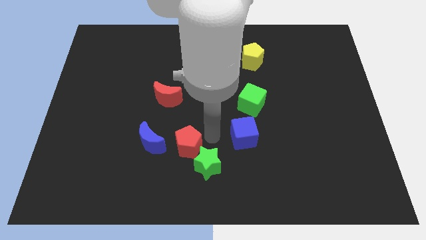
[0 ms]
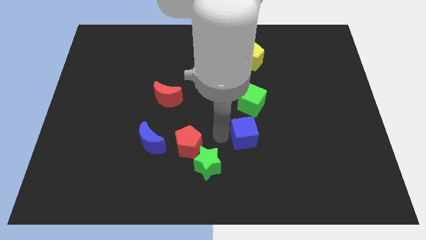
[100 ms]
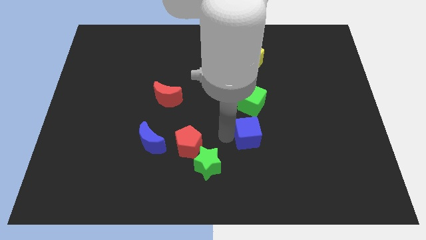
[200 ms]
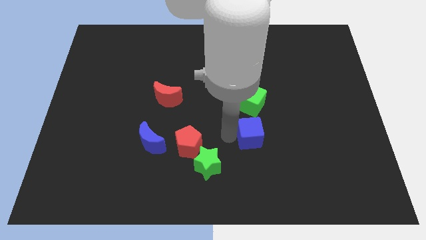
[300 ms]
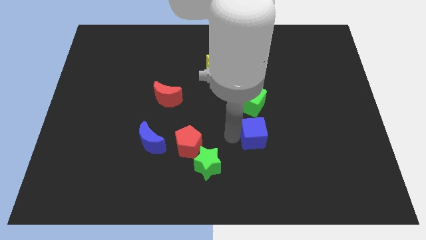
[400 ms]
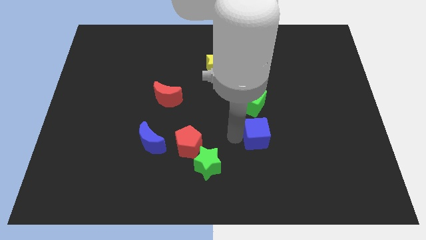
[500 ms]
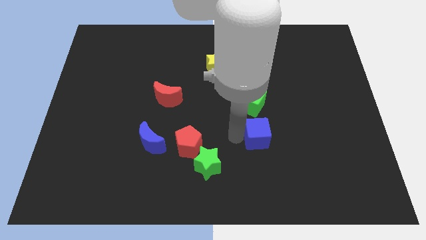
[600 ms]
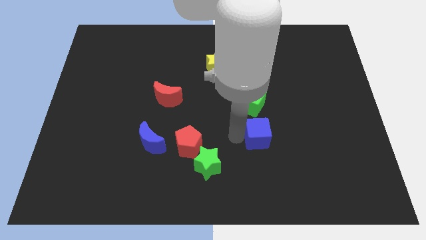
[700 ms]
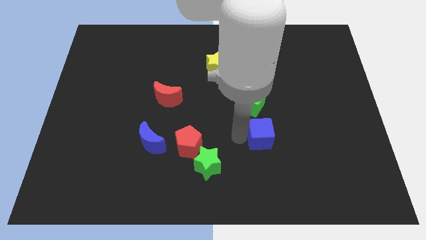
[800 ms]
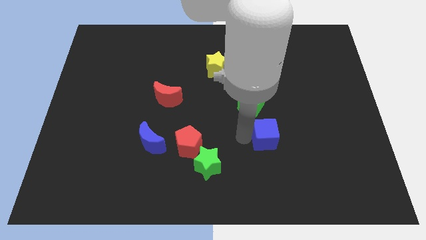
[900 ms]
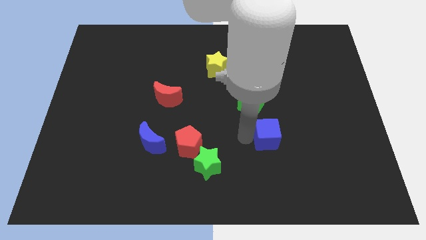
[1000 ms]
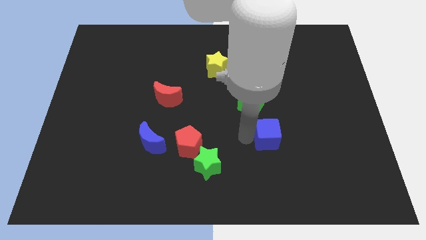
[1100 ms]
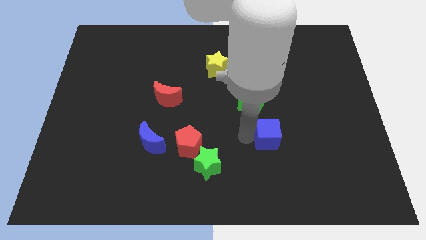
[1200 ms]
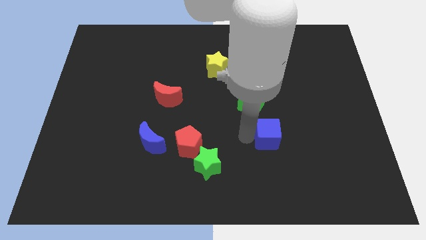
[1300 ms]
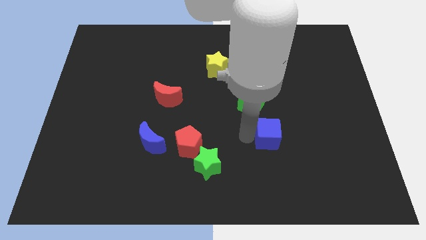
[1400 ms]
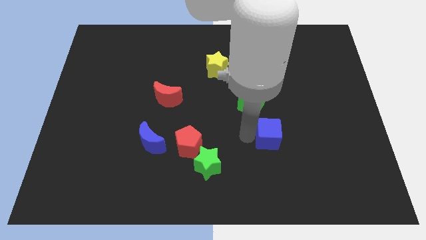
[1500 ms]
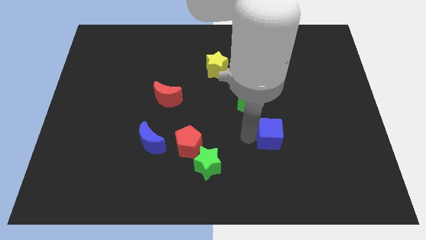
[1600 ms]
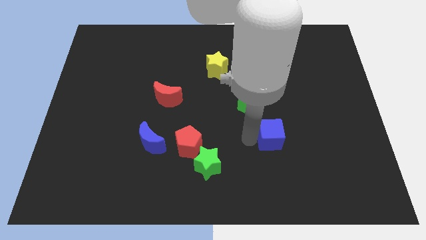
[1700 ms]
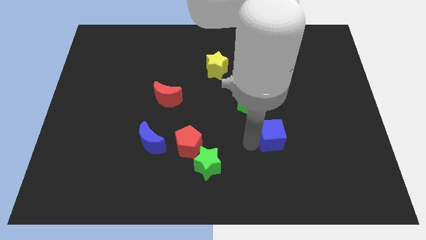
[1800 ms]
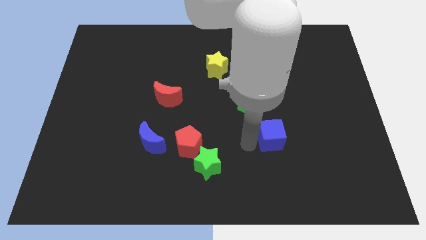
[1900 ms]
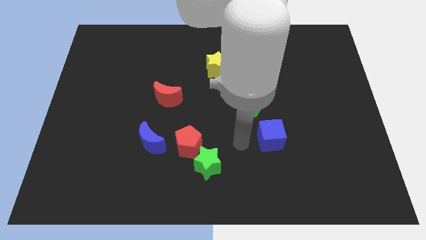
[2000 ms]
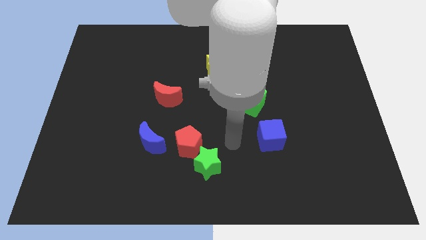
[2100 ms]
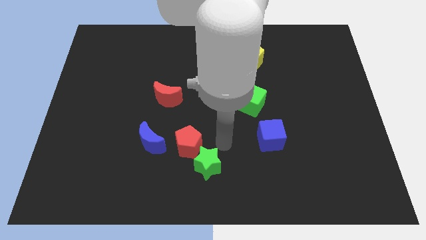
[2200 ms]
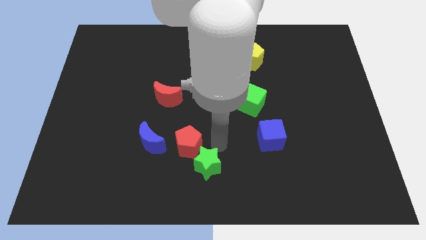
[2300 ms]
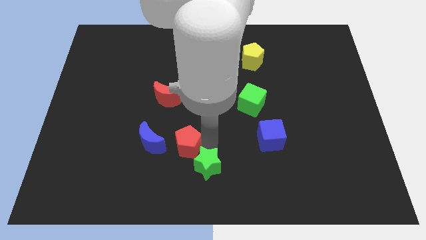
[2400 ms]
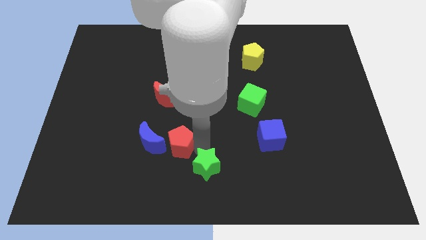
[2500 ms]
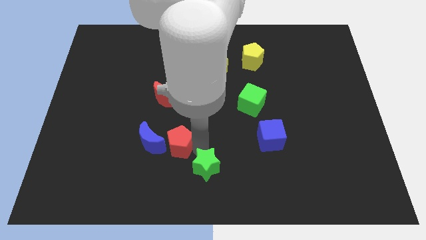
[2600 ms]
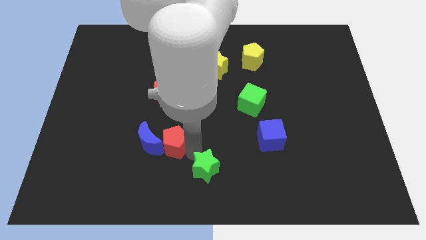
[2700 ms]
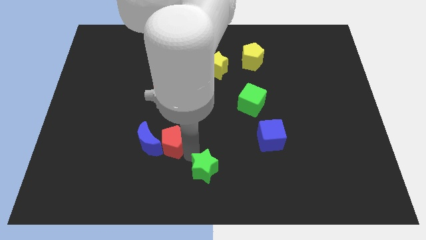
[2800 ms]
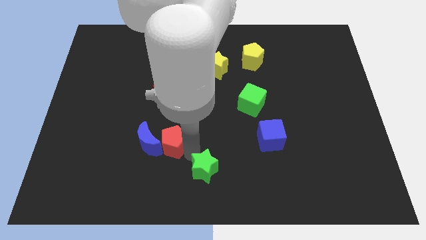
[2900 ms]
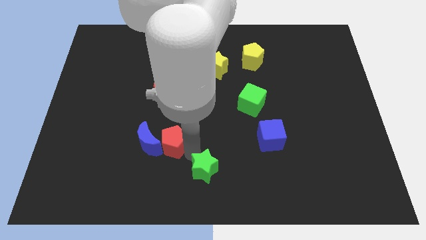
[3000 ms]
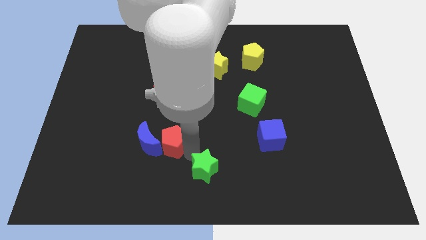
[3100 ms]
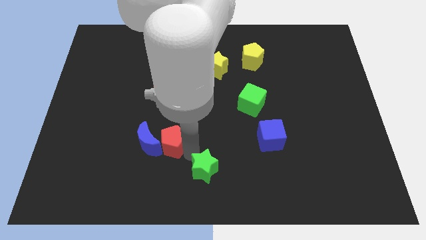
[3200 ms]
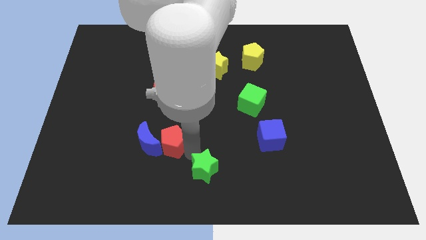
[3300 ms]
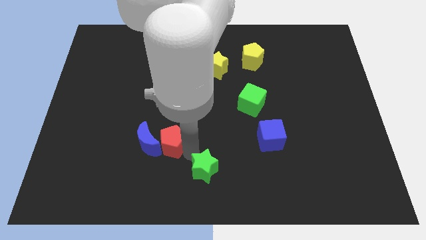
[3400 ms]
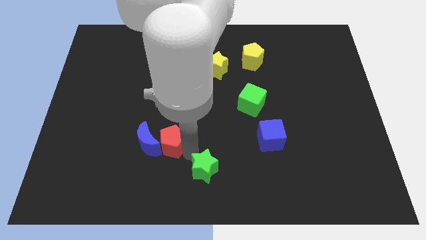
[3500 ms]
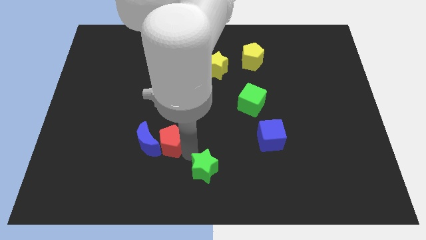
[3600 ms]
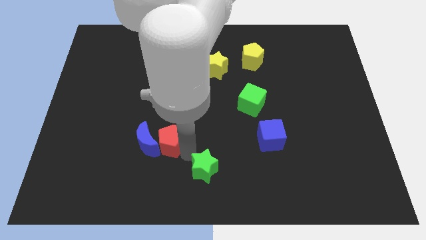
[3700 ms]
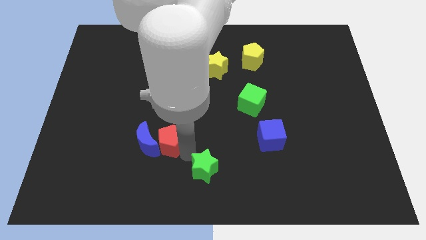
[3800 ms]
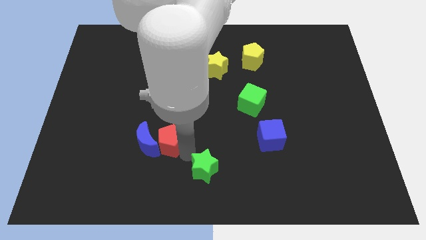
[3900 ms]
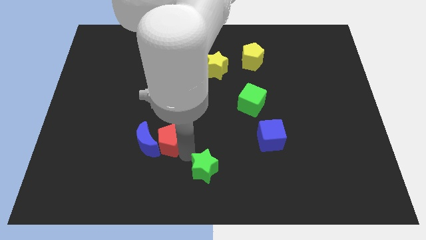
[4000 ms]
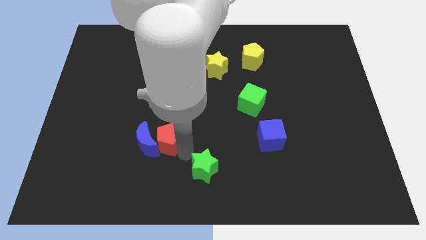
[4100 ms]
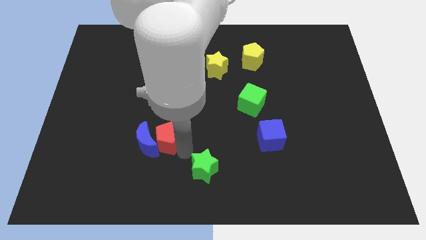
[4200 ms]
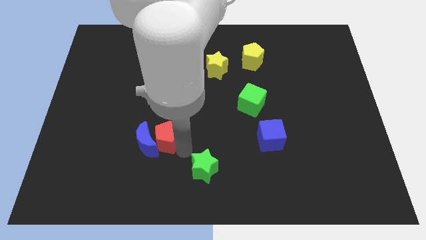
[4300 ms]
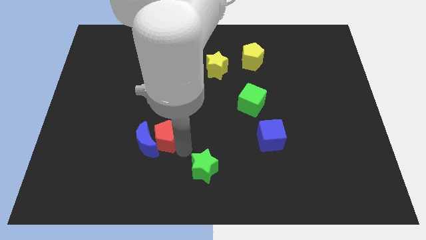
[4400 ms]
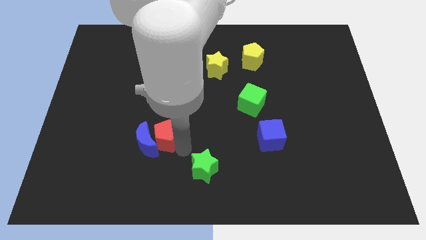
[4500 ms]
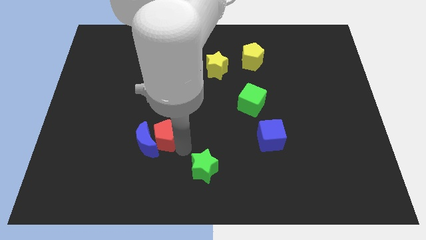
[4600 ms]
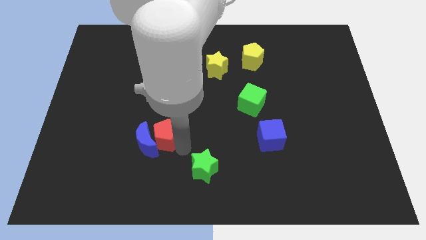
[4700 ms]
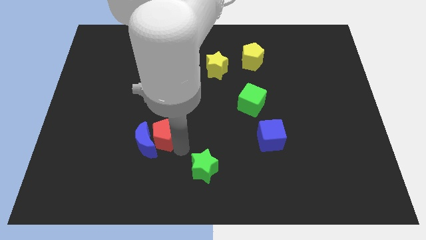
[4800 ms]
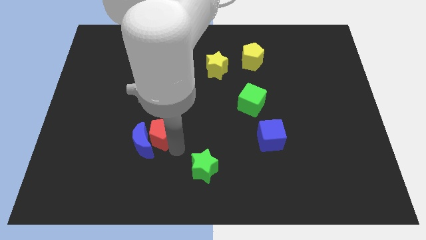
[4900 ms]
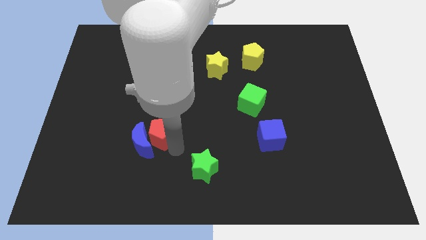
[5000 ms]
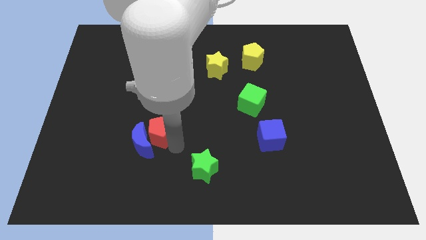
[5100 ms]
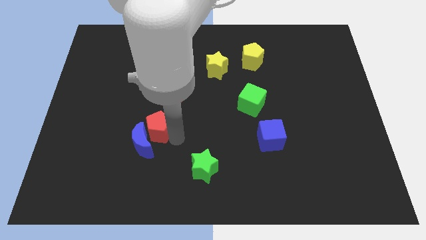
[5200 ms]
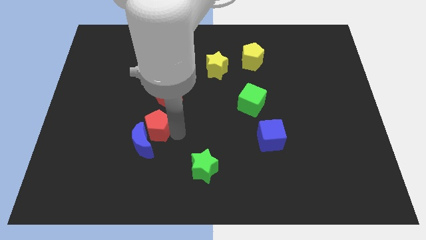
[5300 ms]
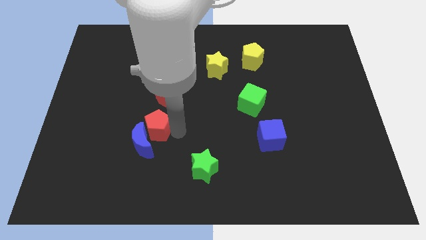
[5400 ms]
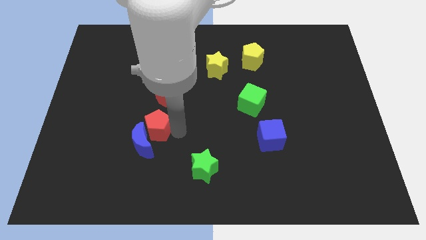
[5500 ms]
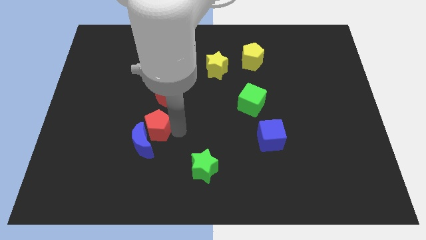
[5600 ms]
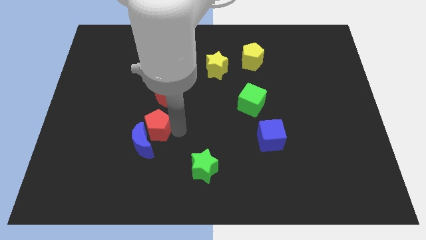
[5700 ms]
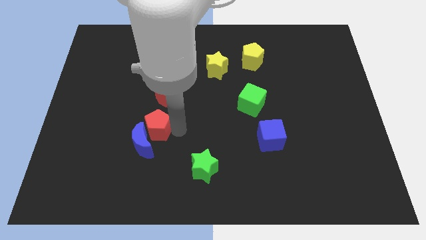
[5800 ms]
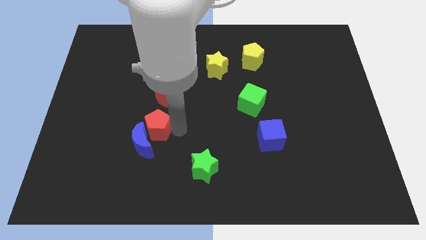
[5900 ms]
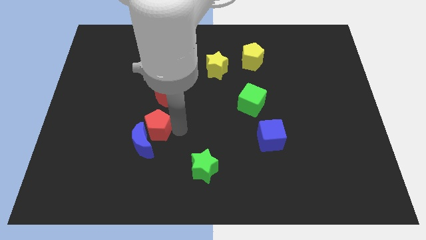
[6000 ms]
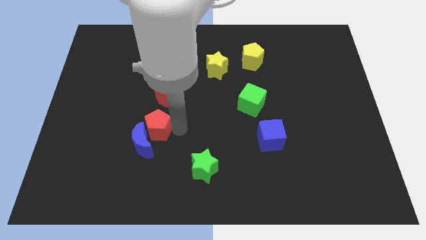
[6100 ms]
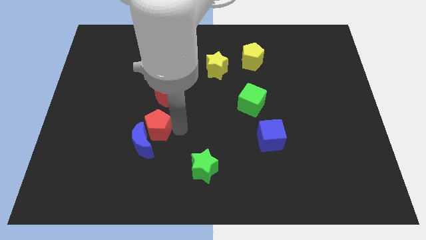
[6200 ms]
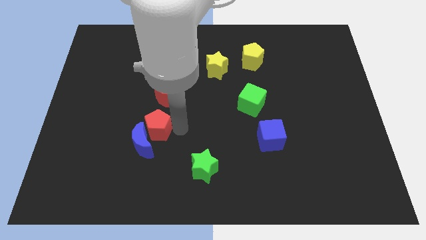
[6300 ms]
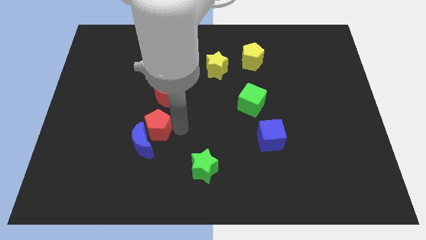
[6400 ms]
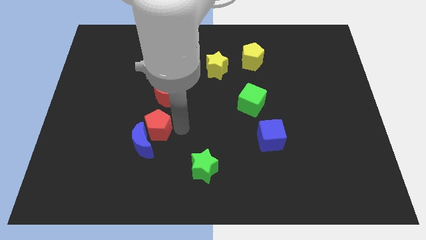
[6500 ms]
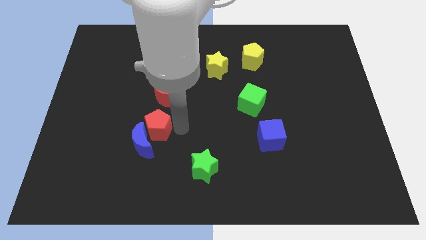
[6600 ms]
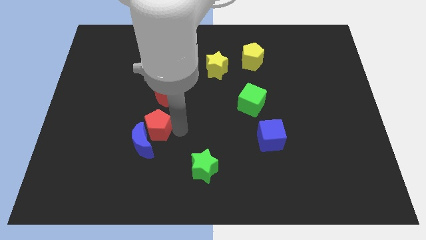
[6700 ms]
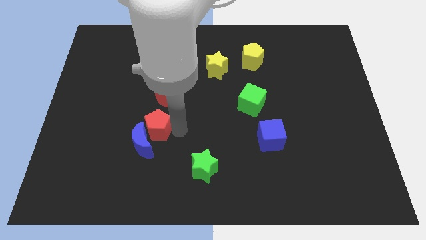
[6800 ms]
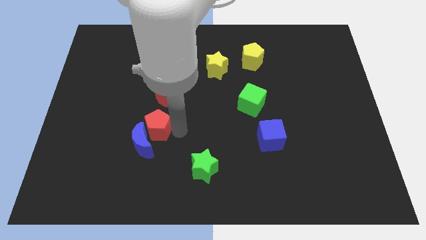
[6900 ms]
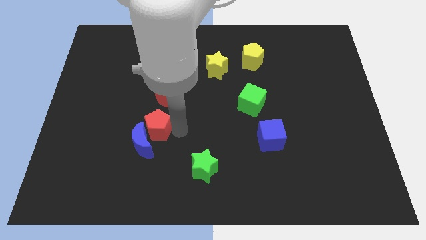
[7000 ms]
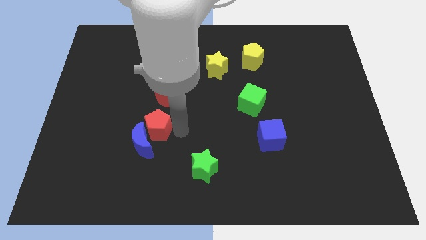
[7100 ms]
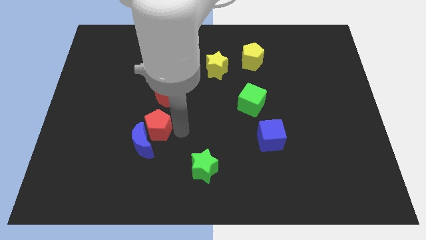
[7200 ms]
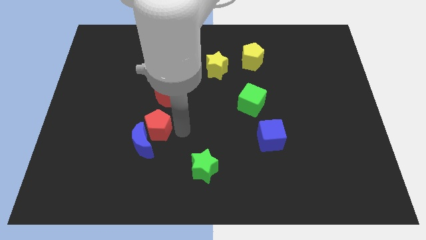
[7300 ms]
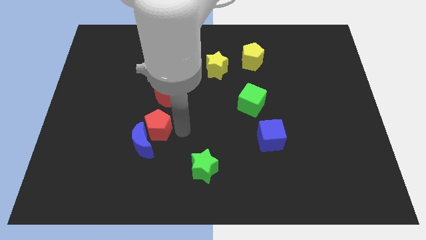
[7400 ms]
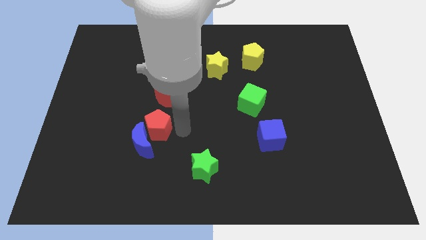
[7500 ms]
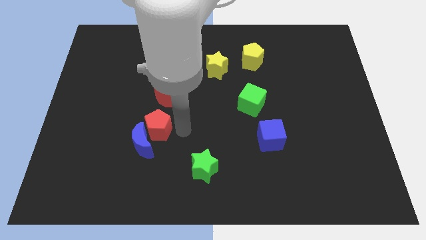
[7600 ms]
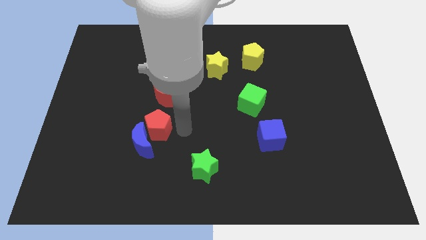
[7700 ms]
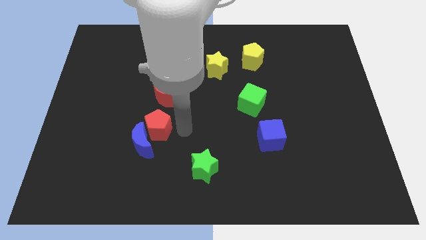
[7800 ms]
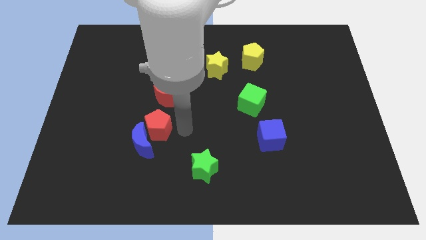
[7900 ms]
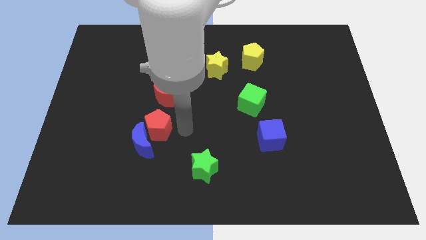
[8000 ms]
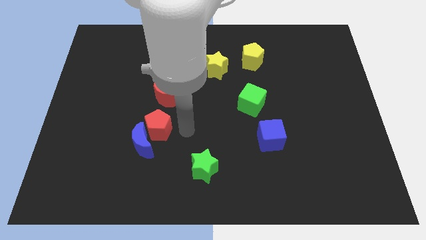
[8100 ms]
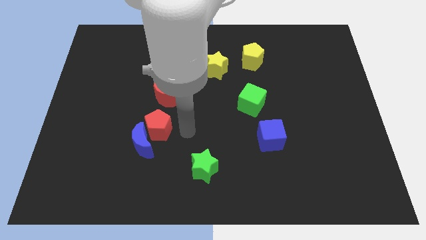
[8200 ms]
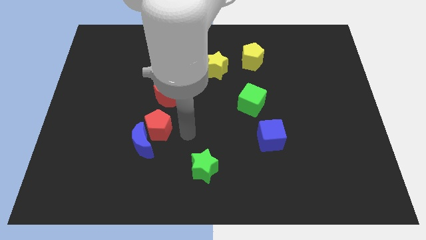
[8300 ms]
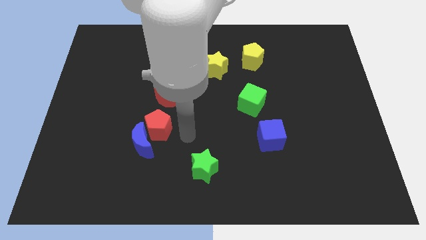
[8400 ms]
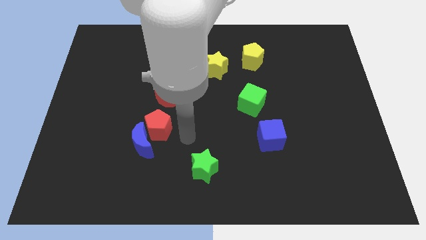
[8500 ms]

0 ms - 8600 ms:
move the red pentagon diagonal to the blue moon

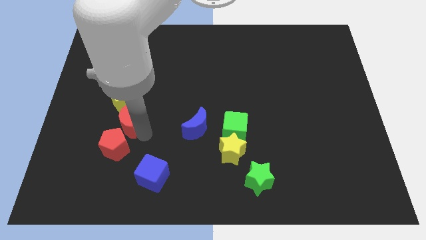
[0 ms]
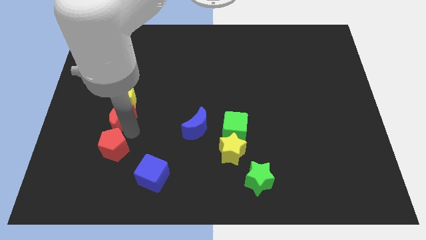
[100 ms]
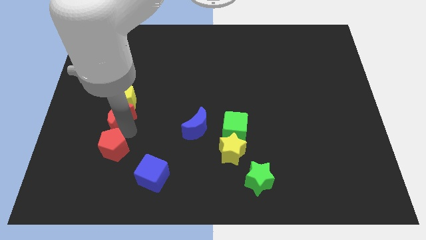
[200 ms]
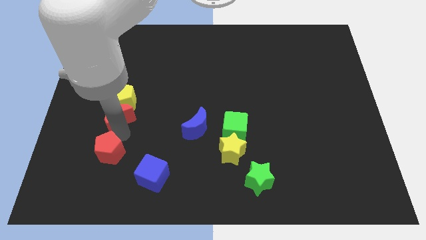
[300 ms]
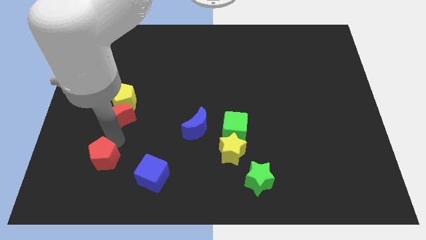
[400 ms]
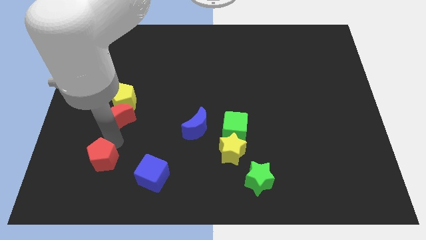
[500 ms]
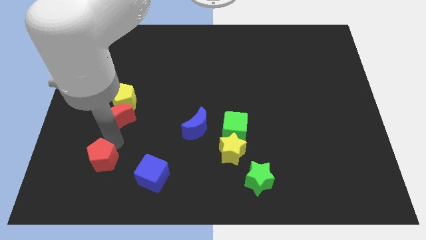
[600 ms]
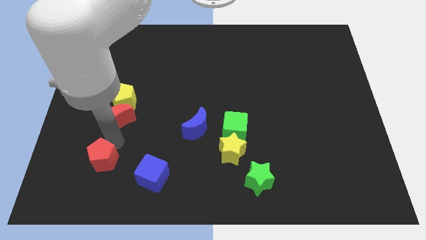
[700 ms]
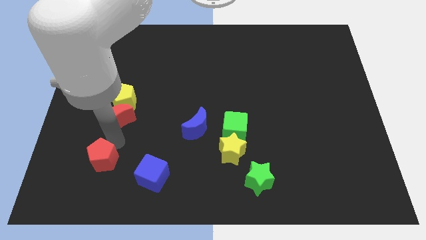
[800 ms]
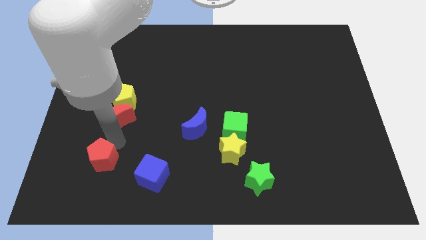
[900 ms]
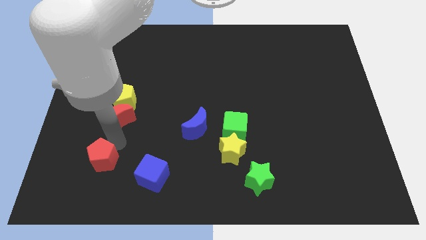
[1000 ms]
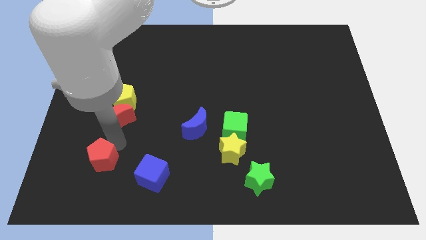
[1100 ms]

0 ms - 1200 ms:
separate the red blocks
